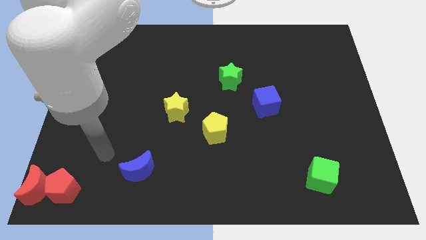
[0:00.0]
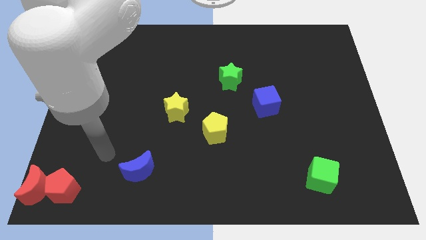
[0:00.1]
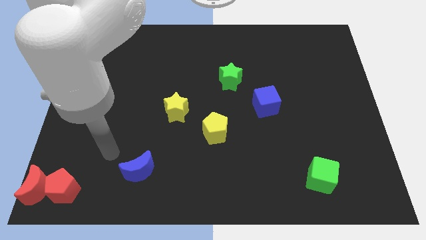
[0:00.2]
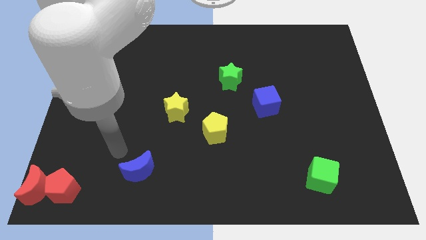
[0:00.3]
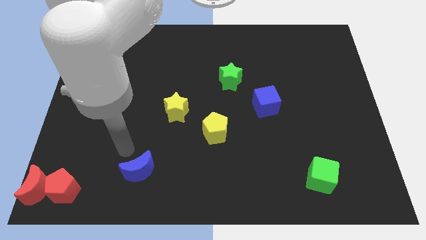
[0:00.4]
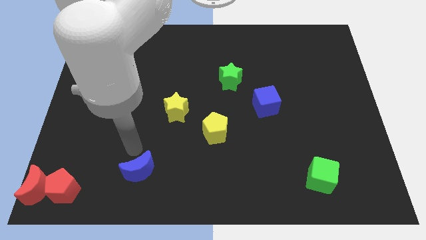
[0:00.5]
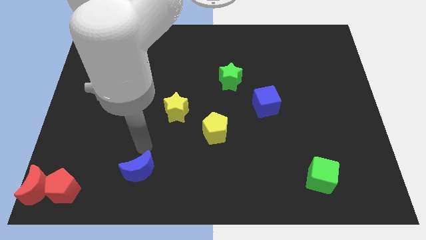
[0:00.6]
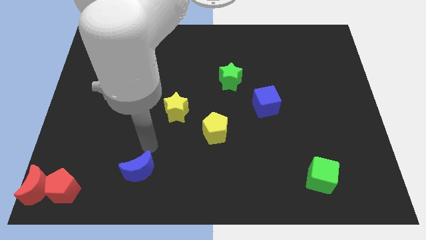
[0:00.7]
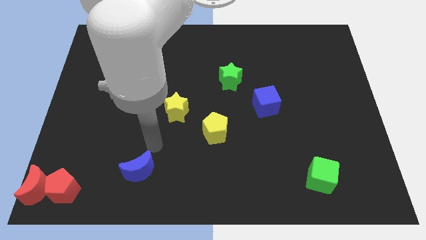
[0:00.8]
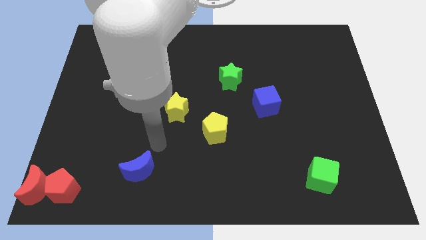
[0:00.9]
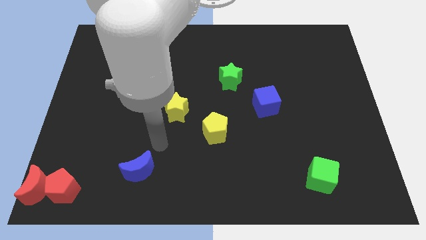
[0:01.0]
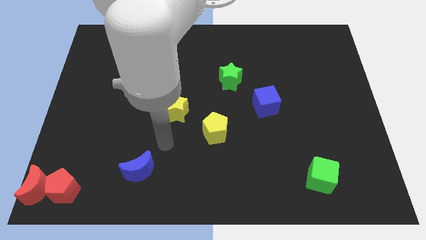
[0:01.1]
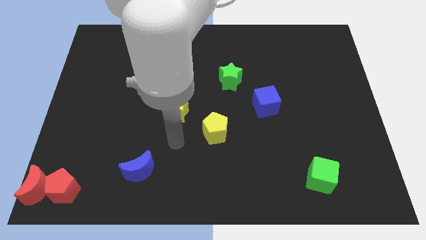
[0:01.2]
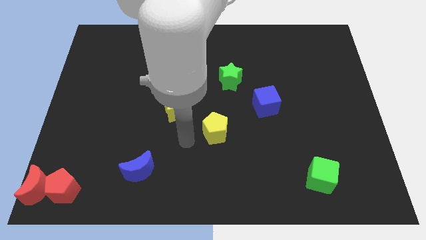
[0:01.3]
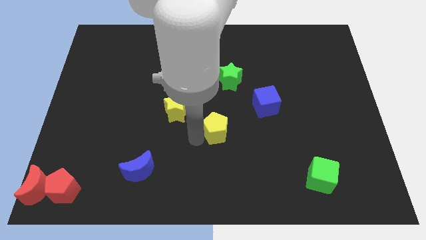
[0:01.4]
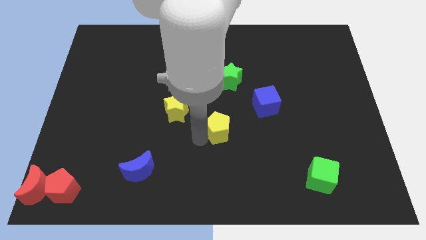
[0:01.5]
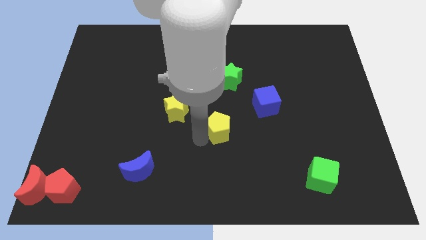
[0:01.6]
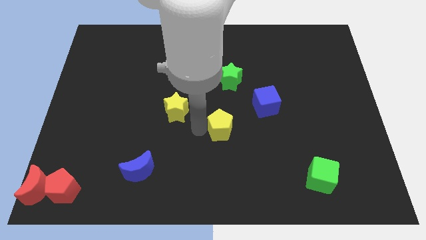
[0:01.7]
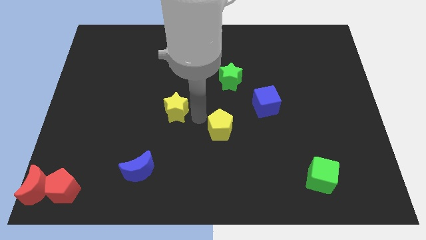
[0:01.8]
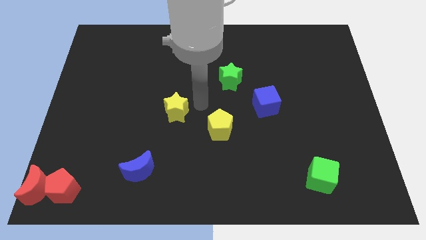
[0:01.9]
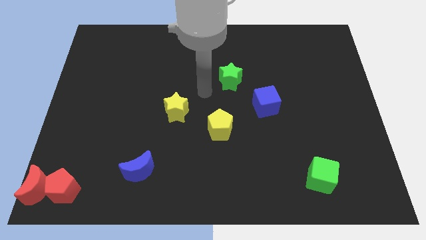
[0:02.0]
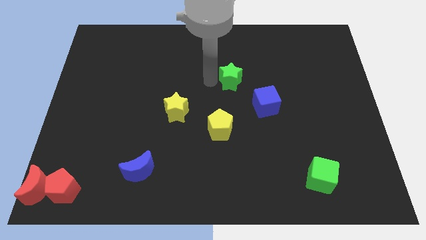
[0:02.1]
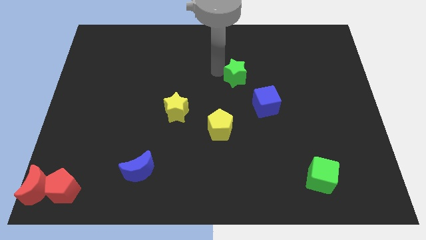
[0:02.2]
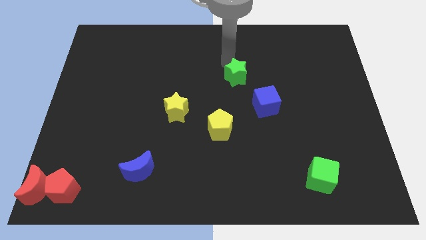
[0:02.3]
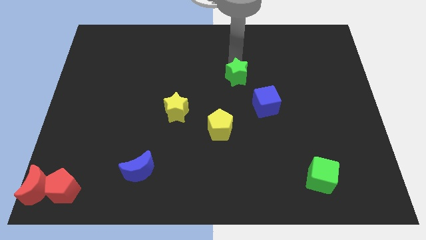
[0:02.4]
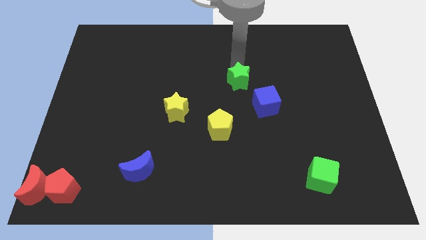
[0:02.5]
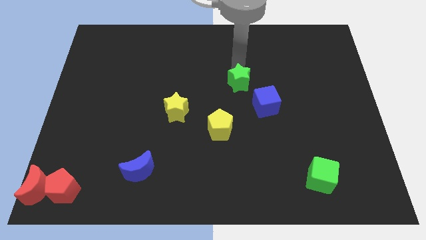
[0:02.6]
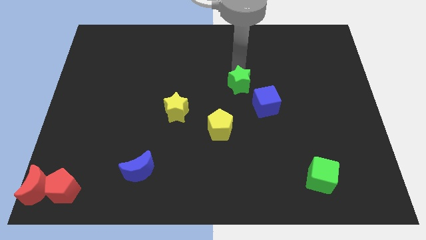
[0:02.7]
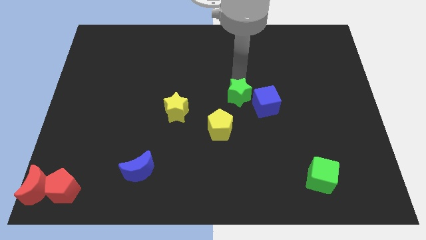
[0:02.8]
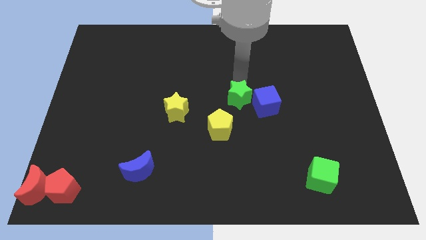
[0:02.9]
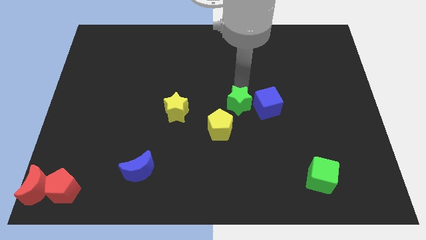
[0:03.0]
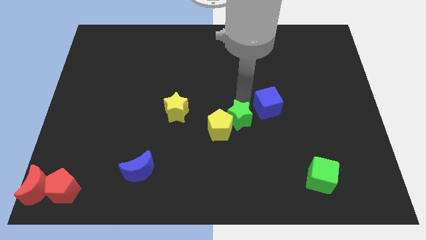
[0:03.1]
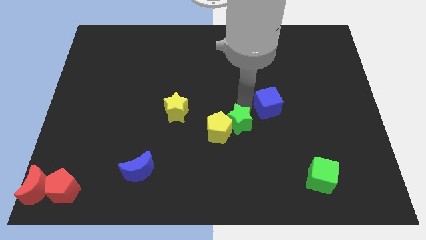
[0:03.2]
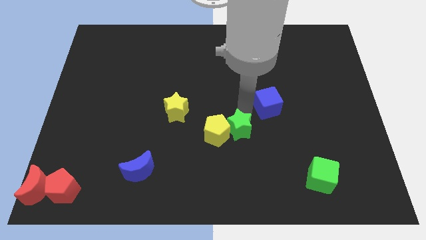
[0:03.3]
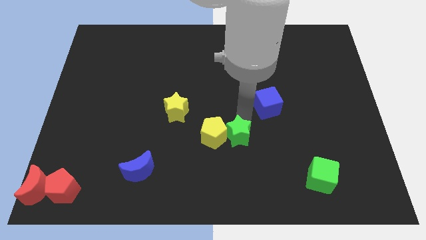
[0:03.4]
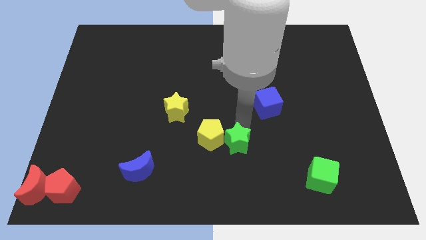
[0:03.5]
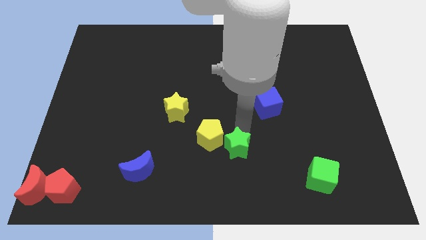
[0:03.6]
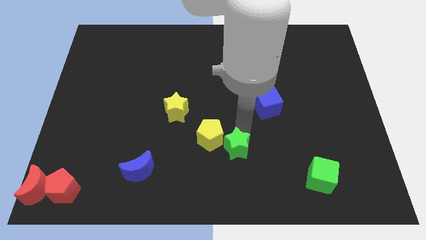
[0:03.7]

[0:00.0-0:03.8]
push the green star towards the bottom

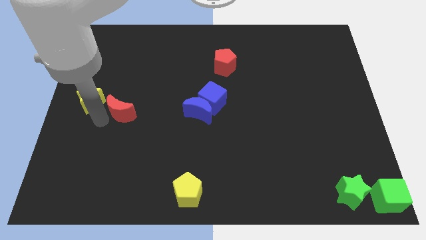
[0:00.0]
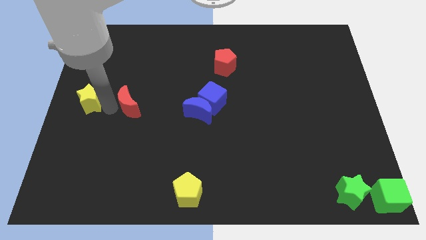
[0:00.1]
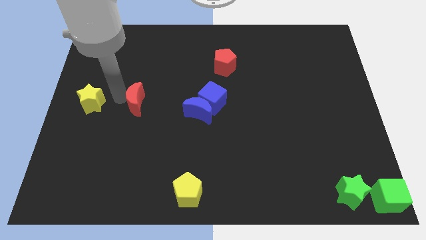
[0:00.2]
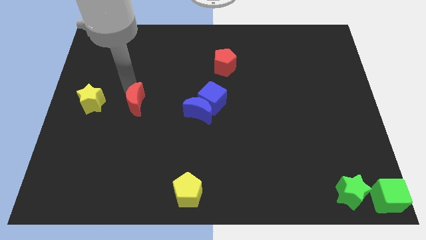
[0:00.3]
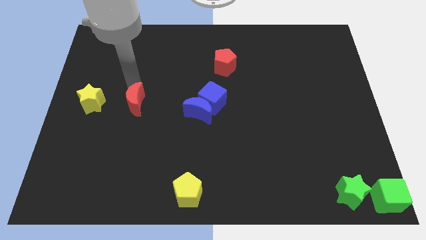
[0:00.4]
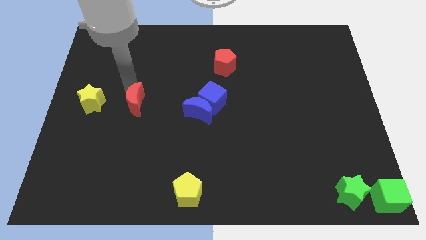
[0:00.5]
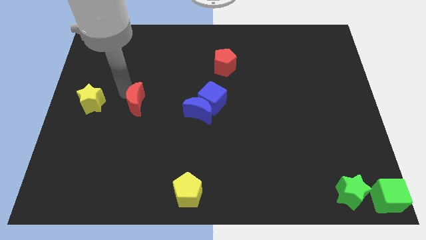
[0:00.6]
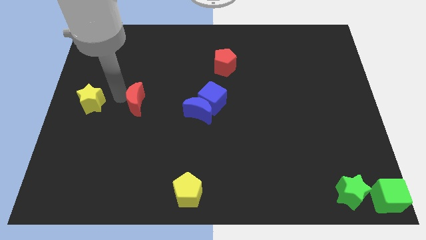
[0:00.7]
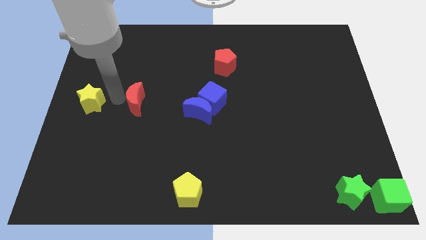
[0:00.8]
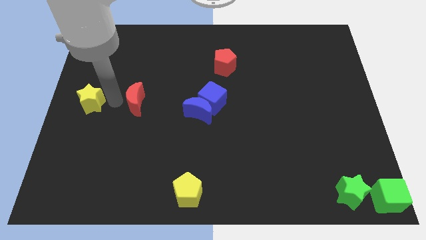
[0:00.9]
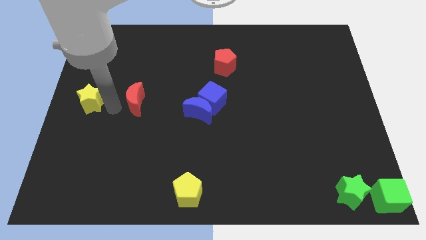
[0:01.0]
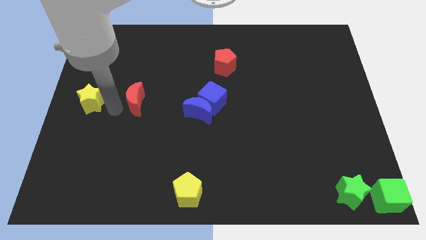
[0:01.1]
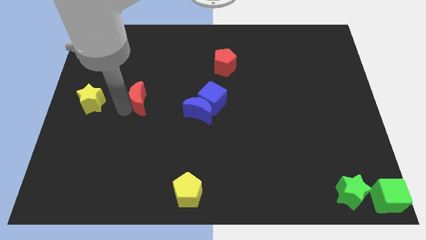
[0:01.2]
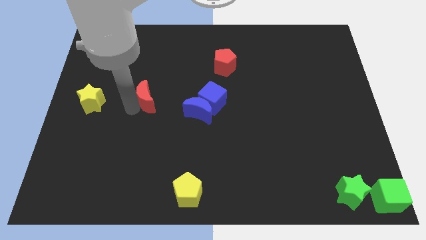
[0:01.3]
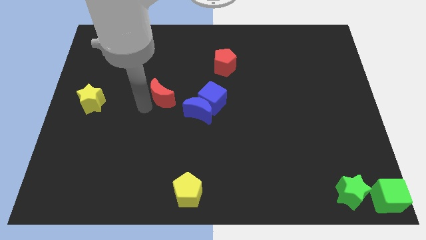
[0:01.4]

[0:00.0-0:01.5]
push the red moon to the left of the blue cube

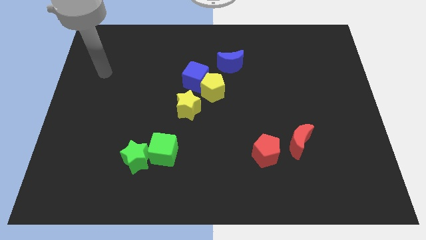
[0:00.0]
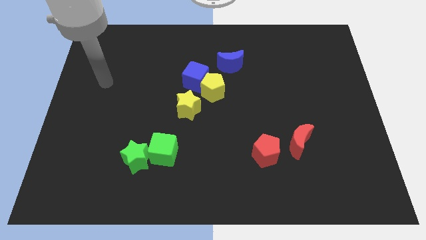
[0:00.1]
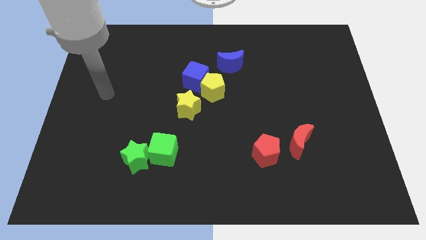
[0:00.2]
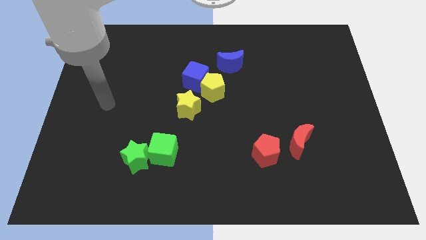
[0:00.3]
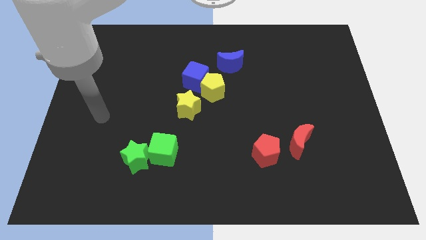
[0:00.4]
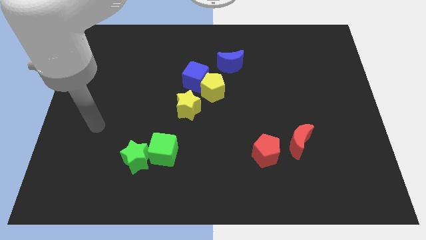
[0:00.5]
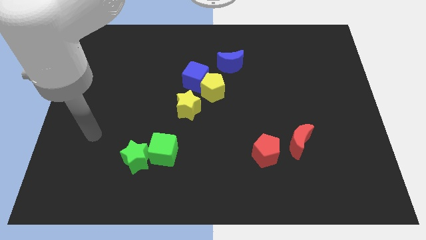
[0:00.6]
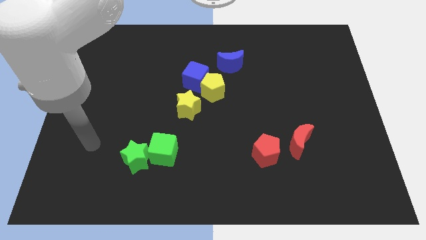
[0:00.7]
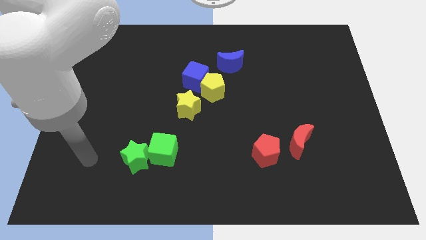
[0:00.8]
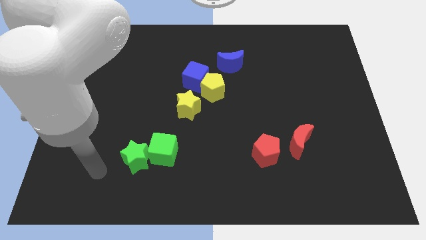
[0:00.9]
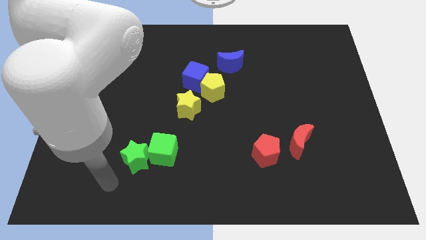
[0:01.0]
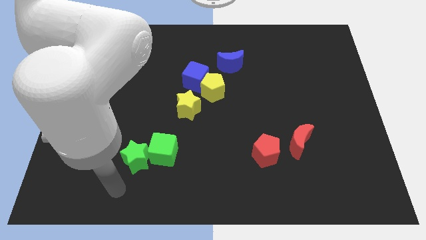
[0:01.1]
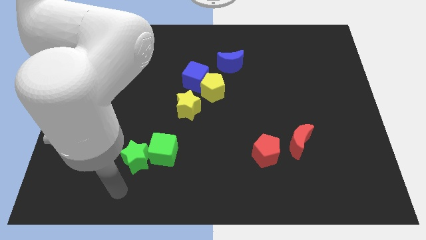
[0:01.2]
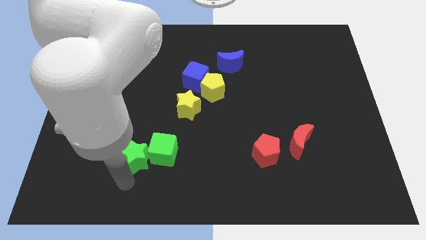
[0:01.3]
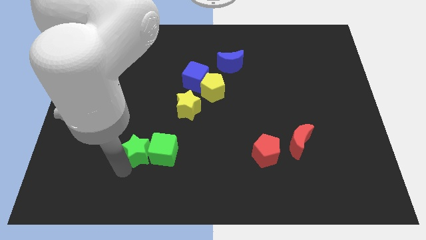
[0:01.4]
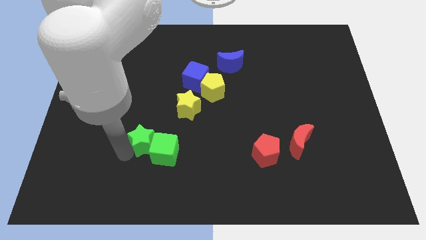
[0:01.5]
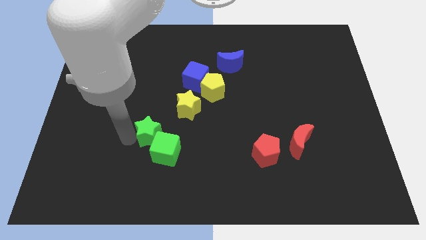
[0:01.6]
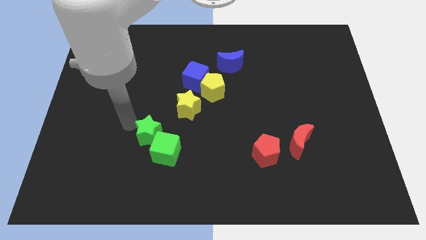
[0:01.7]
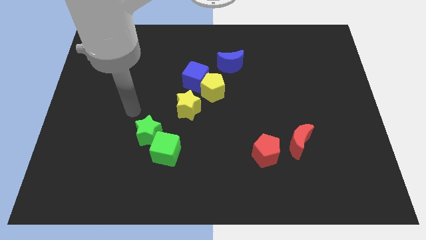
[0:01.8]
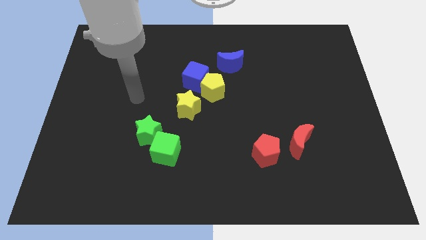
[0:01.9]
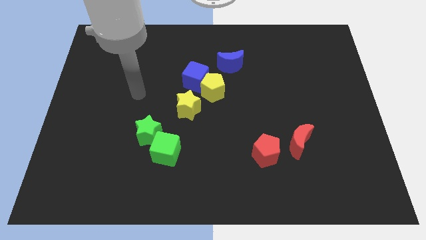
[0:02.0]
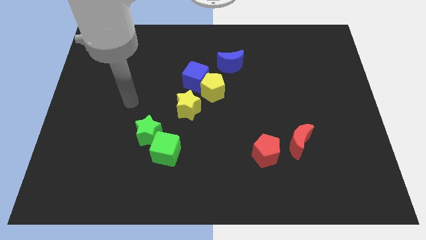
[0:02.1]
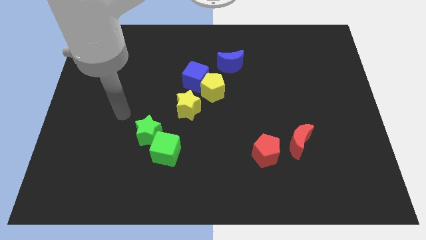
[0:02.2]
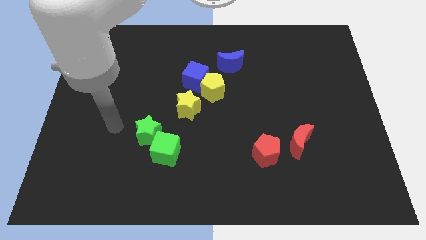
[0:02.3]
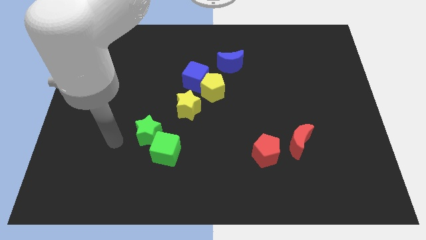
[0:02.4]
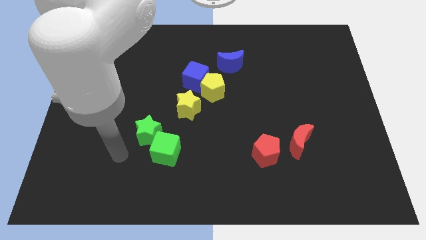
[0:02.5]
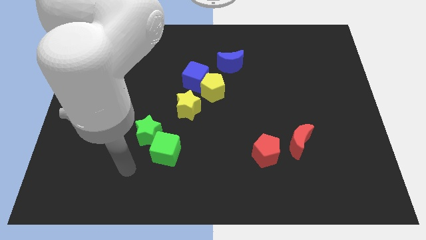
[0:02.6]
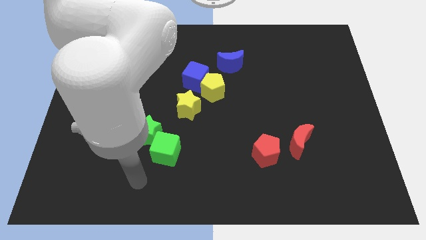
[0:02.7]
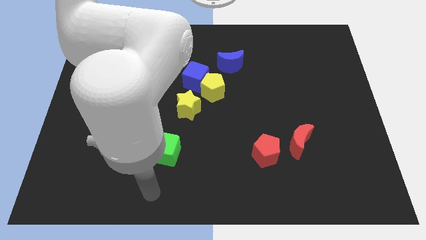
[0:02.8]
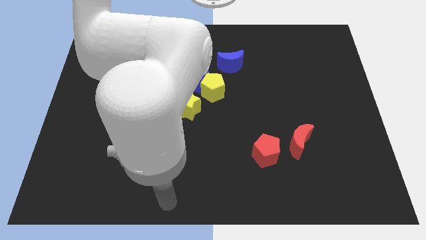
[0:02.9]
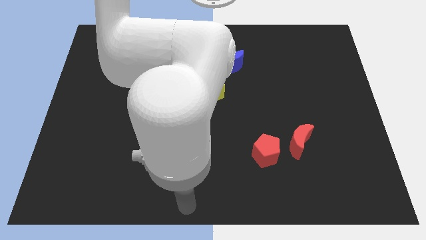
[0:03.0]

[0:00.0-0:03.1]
move the green star top left to the green cube

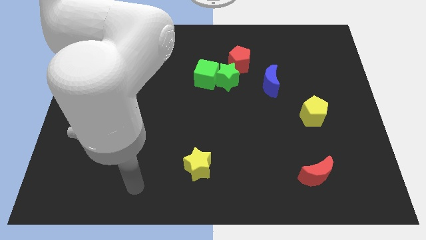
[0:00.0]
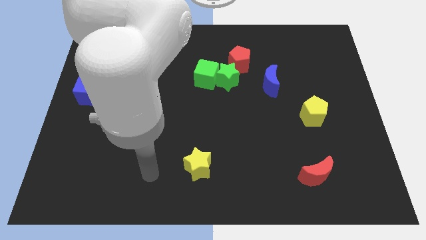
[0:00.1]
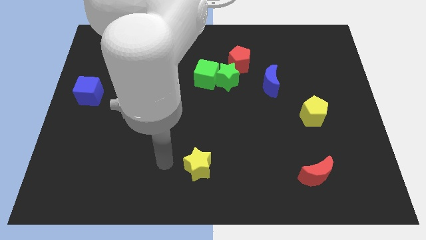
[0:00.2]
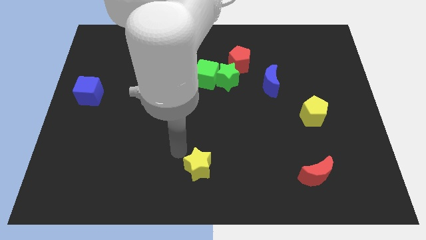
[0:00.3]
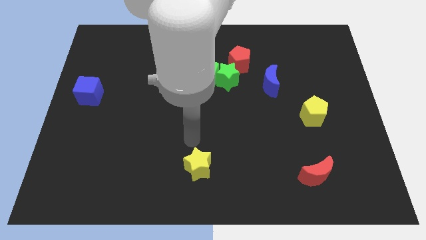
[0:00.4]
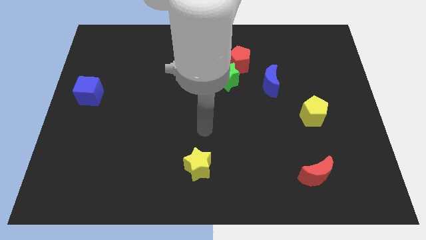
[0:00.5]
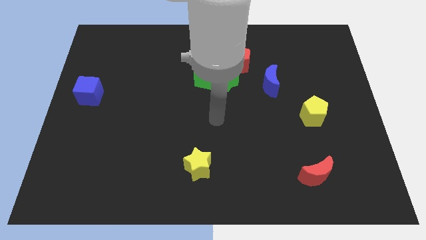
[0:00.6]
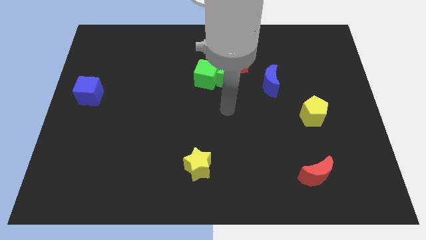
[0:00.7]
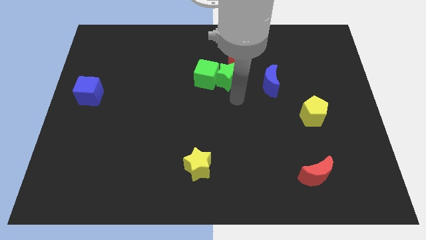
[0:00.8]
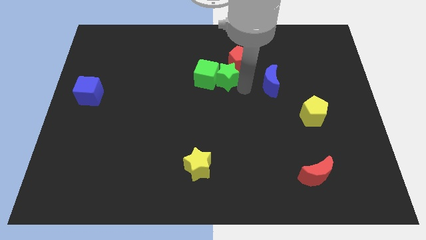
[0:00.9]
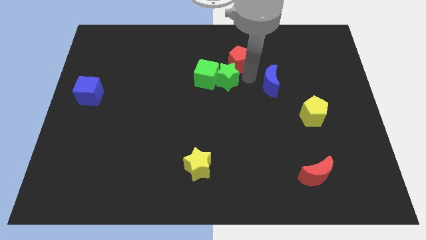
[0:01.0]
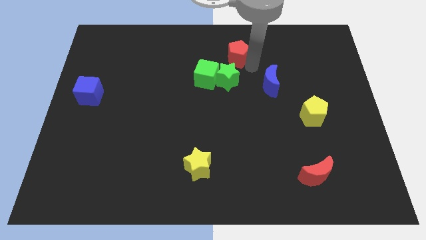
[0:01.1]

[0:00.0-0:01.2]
place your arm at the right of the green star
